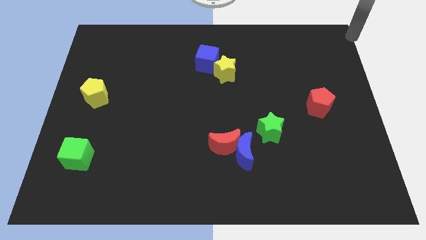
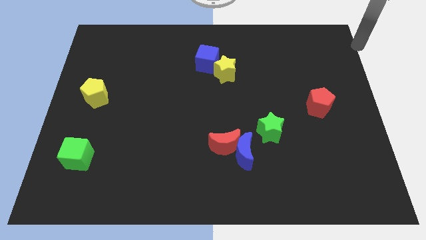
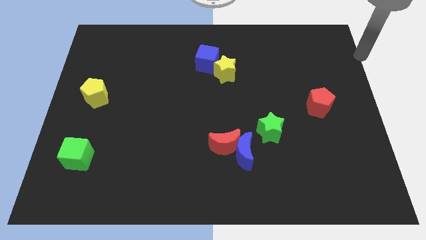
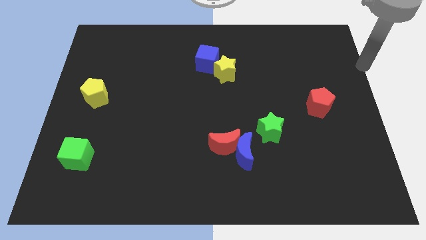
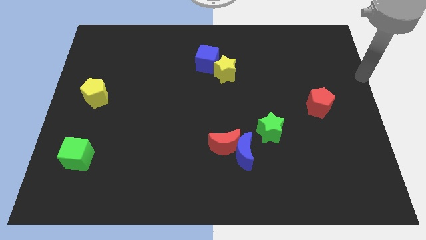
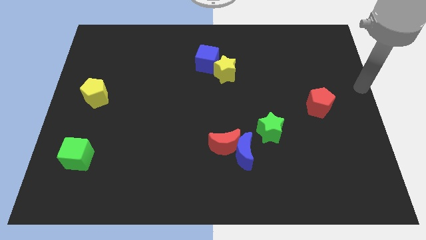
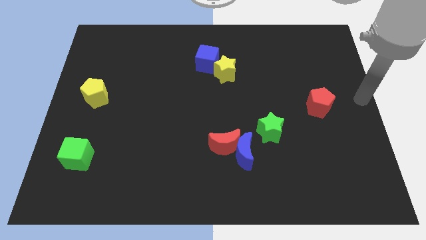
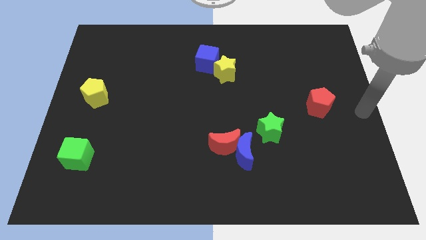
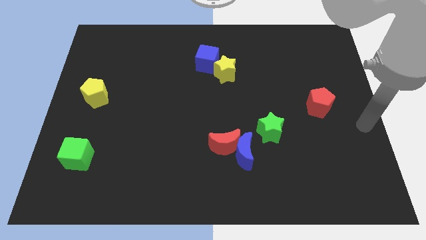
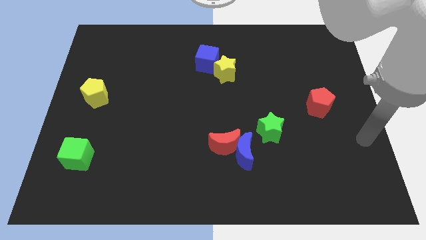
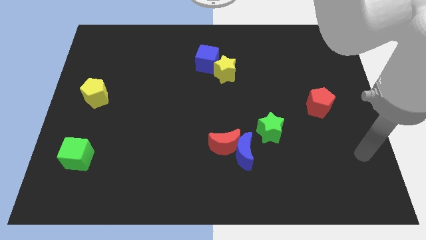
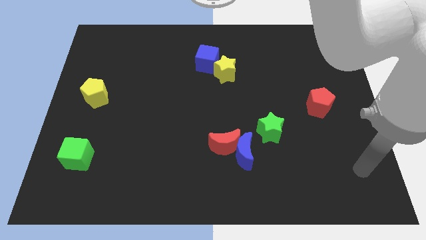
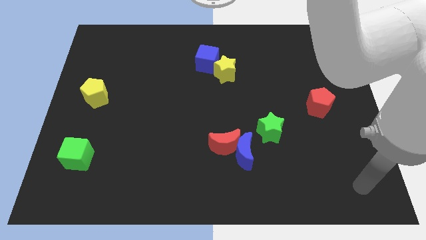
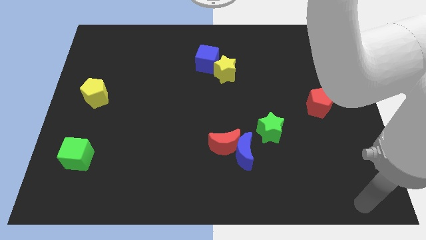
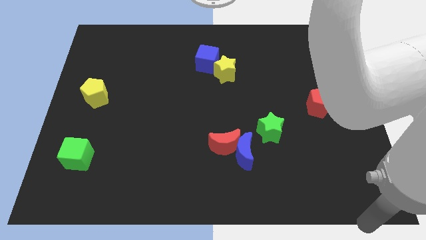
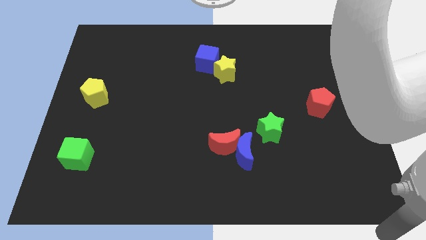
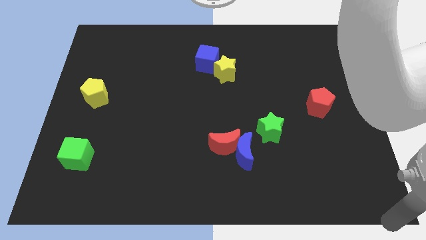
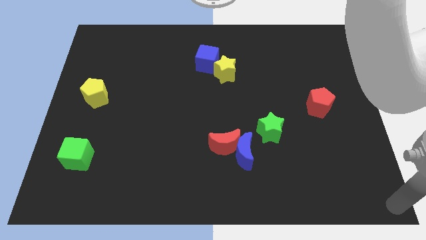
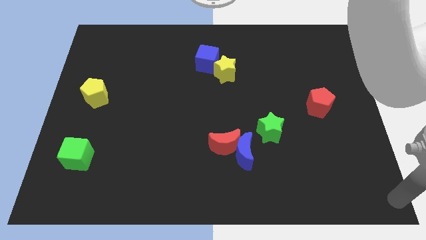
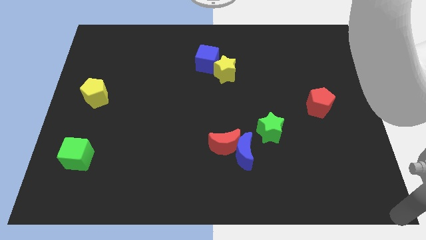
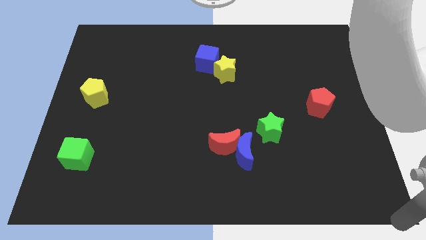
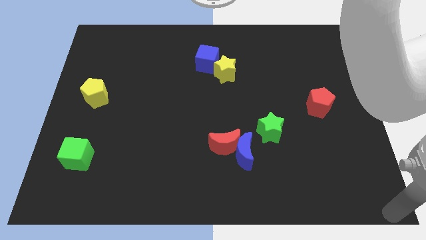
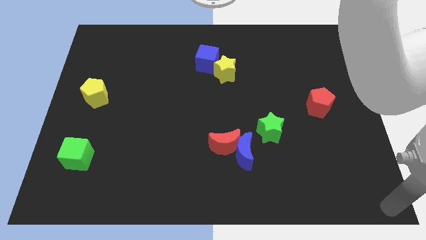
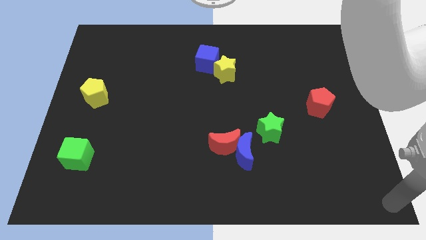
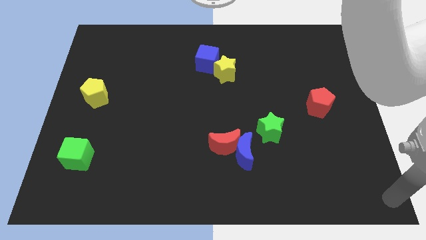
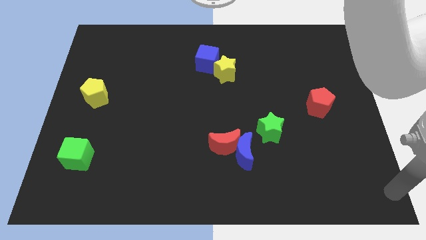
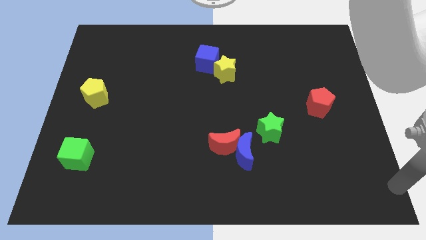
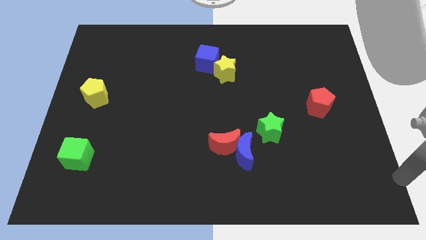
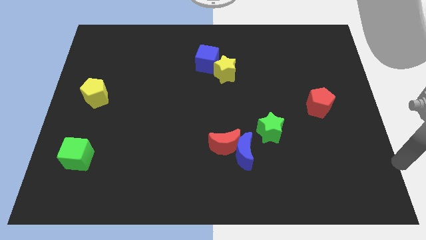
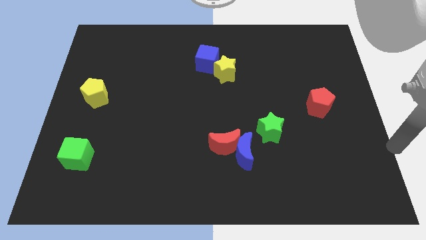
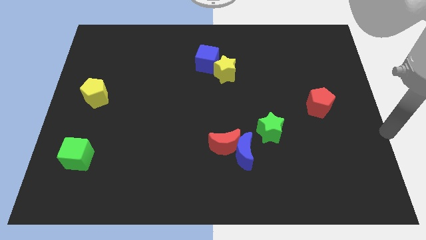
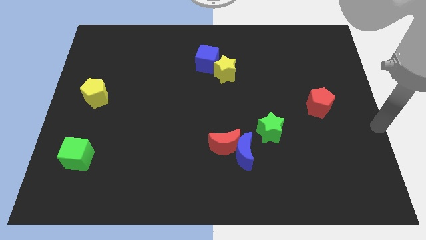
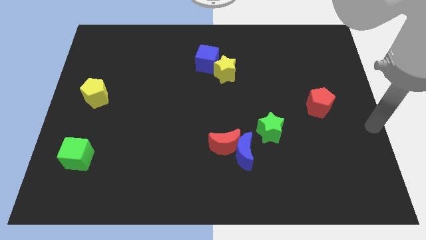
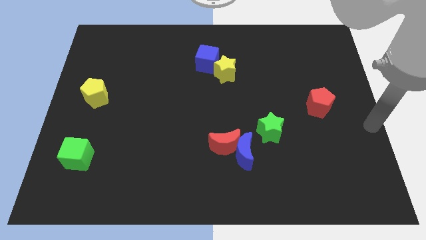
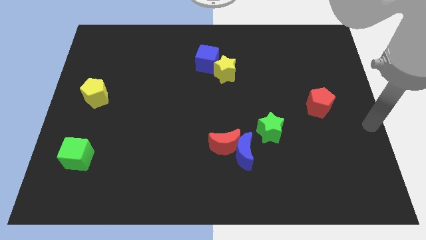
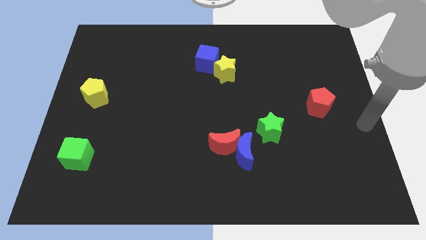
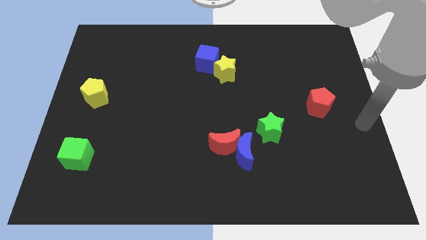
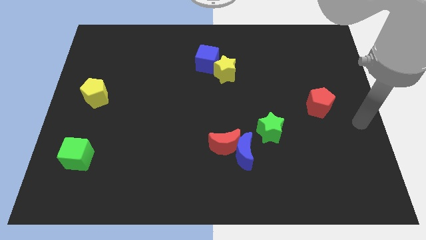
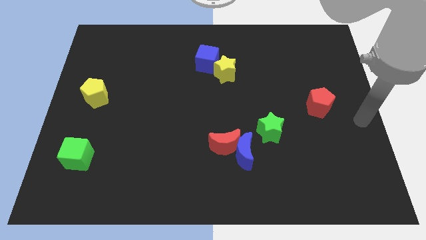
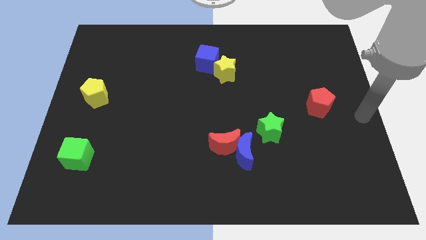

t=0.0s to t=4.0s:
move the arm to the bottom right corner of the board

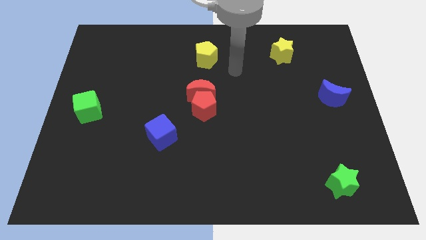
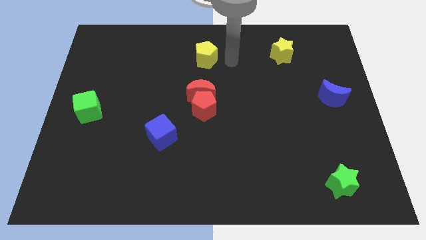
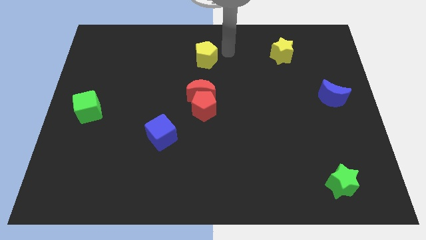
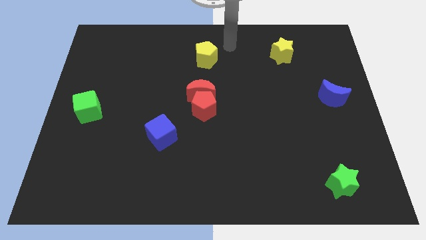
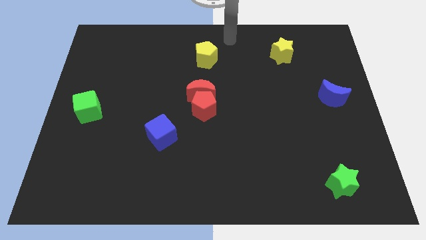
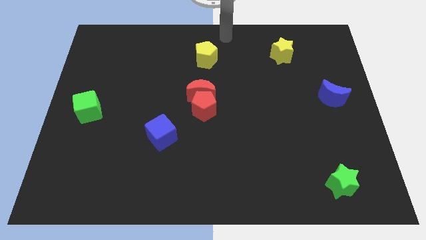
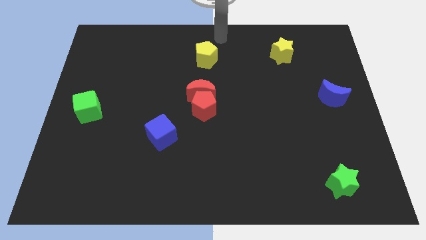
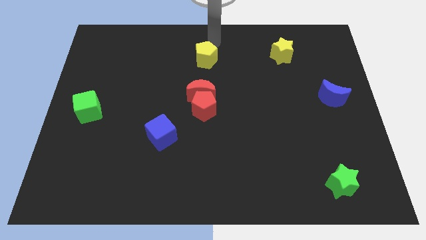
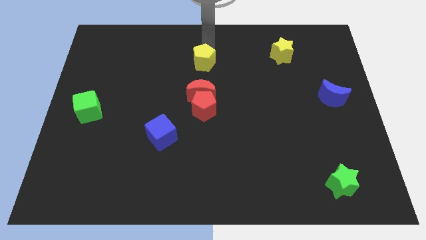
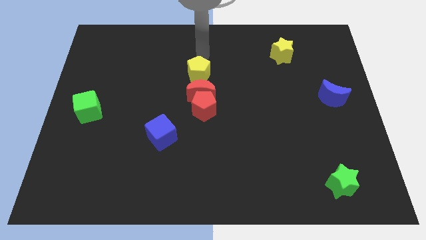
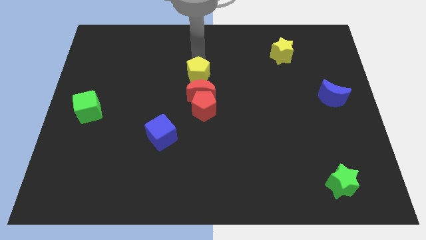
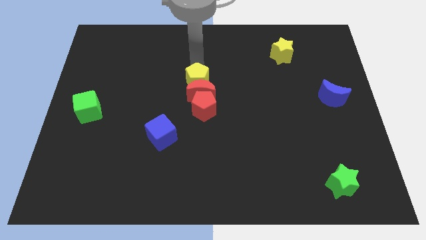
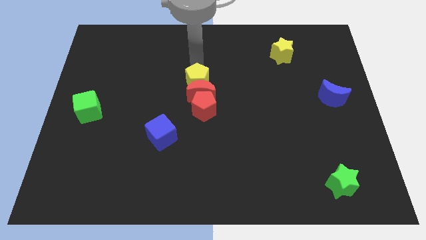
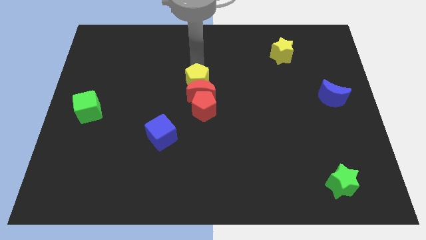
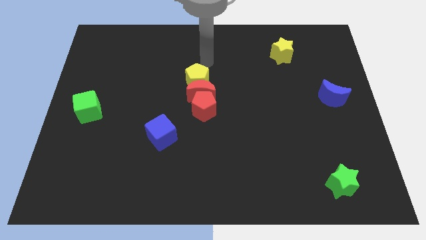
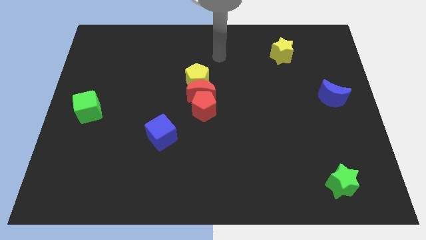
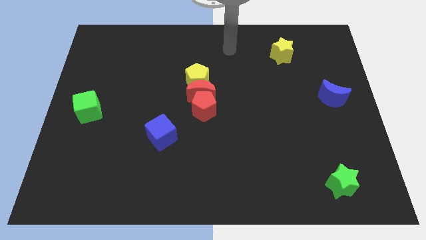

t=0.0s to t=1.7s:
push the yellow pentagon into the red crescent

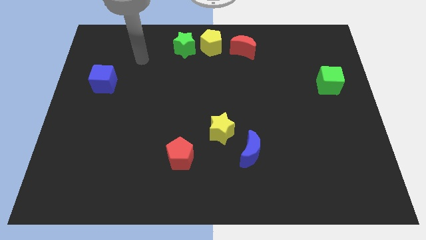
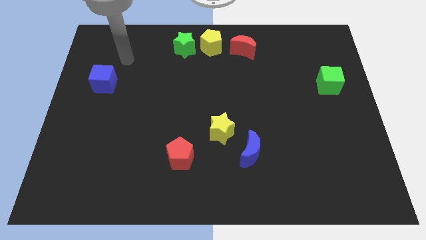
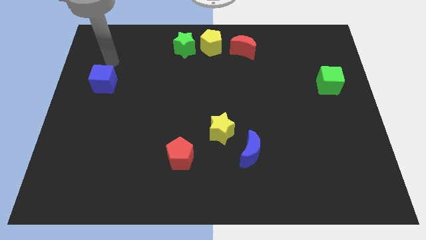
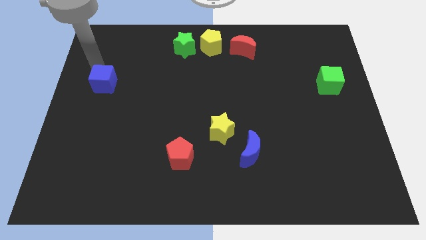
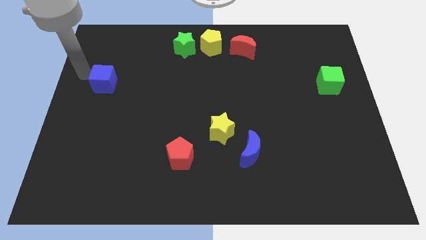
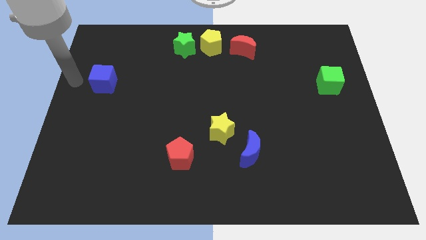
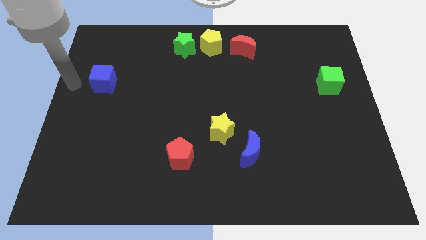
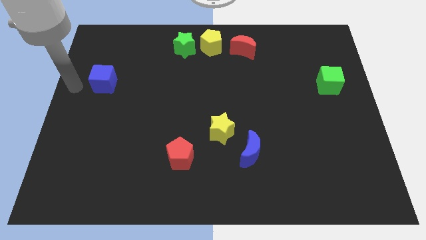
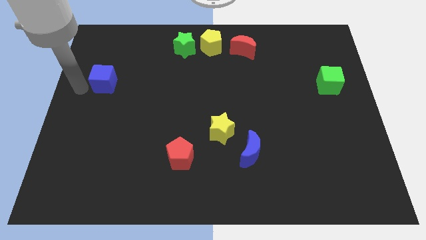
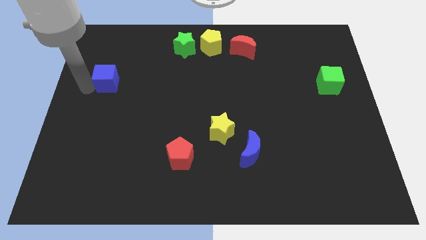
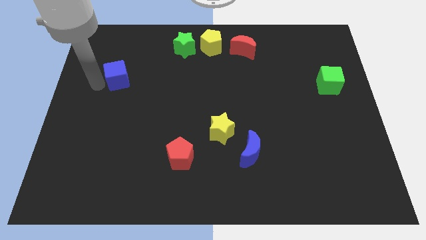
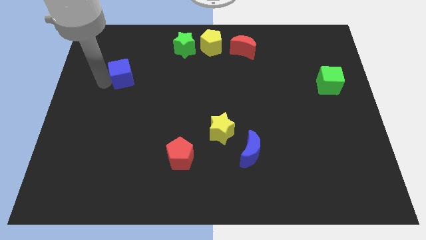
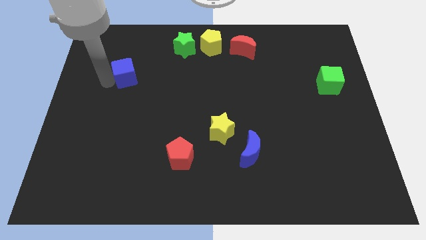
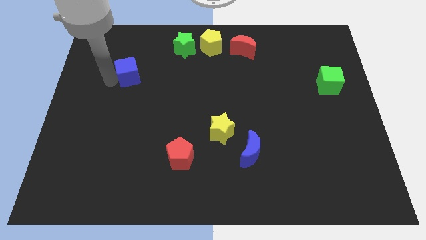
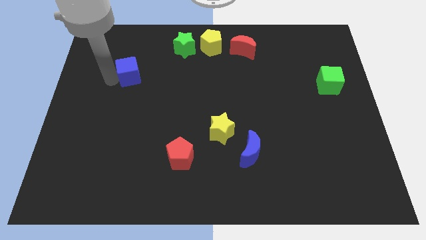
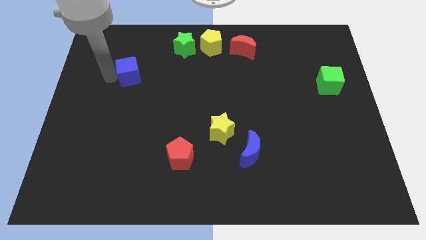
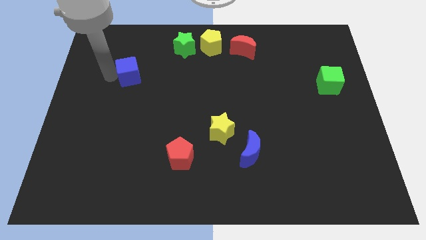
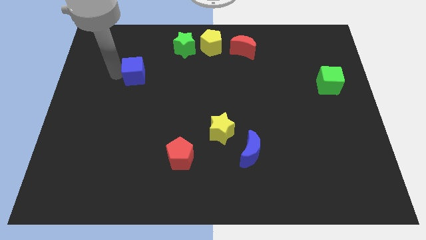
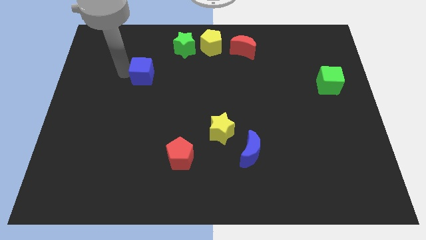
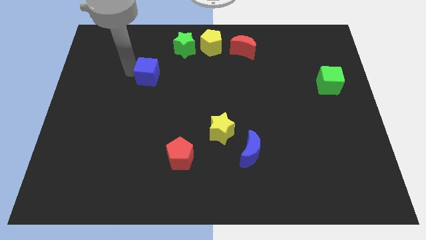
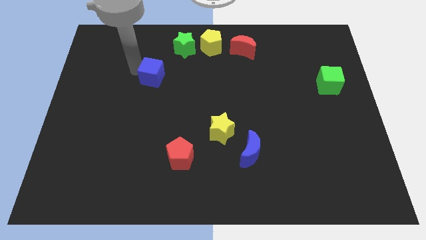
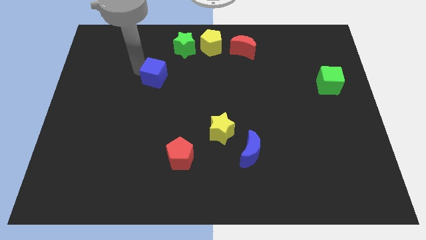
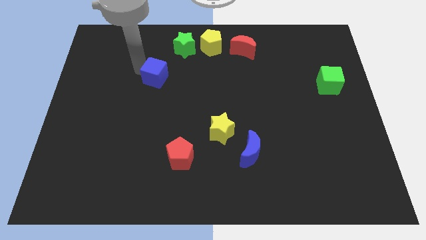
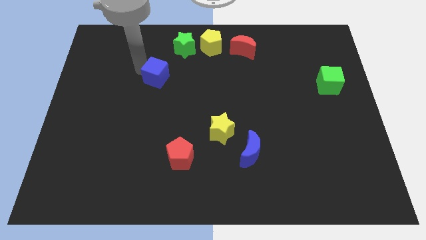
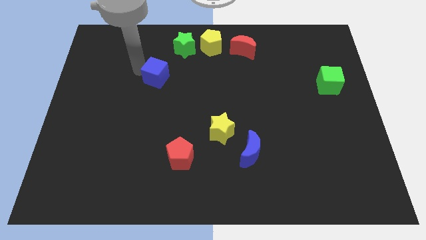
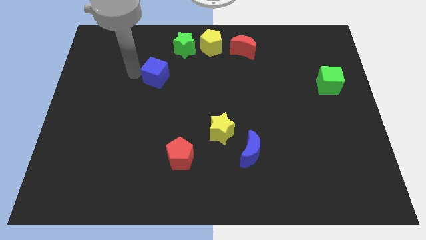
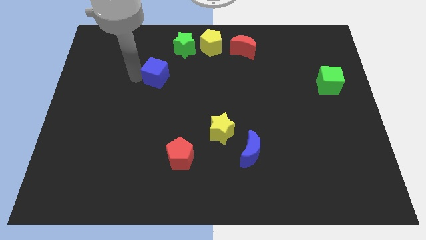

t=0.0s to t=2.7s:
move the blue cube diagonally bottom left to green star

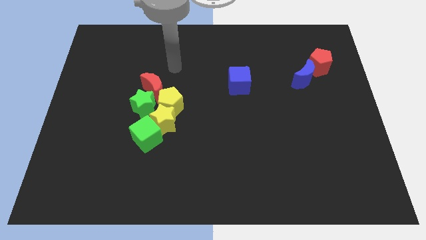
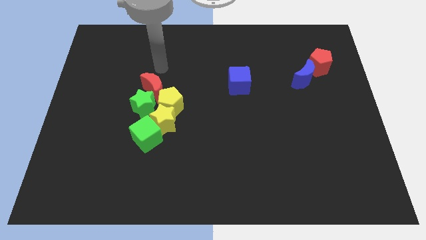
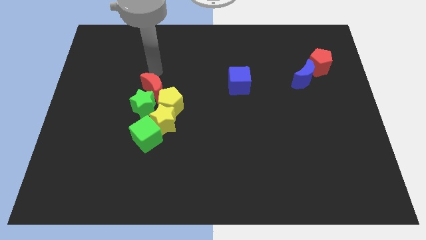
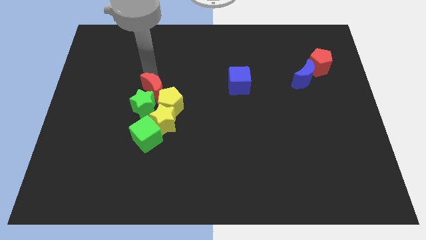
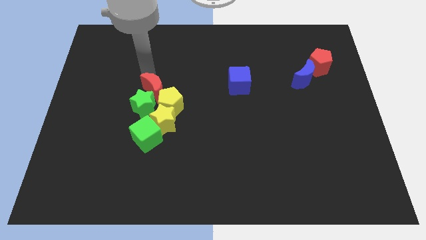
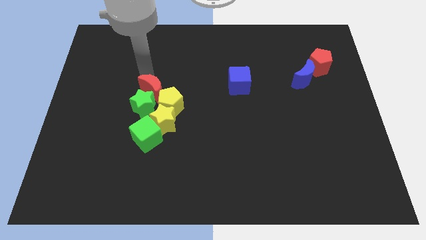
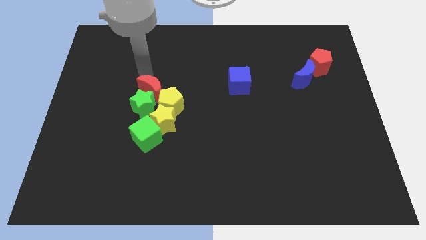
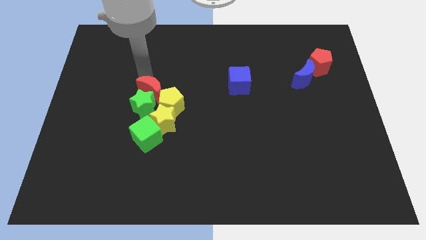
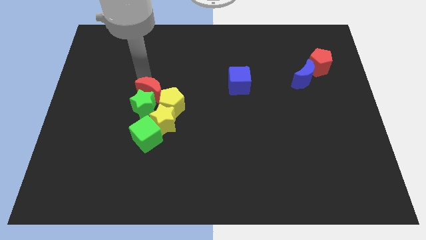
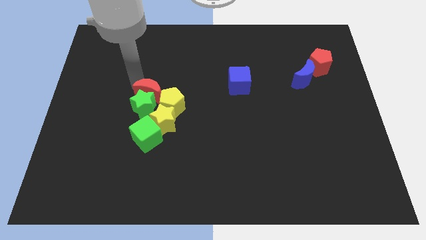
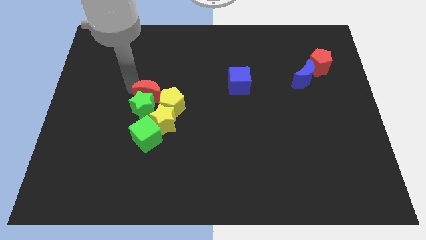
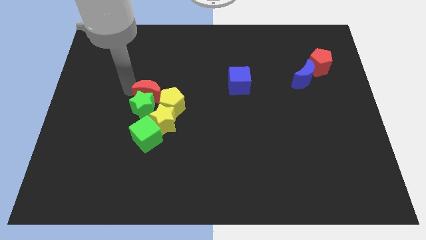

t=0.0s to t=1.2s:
move red crescent into the green star
